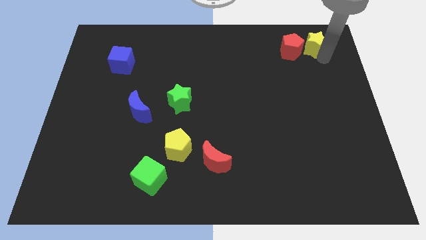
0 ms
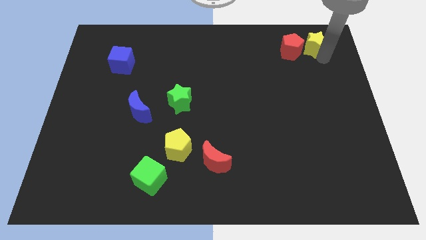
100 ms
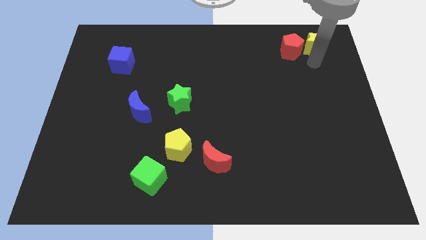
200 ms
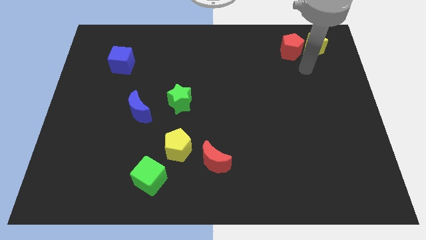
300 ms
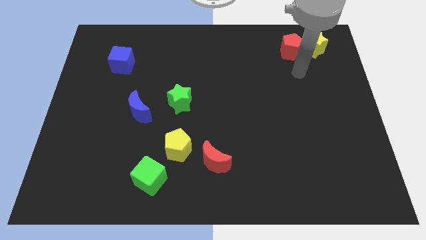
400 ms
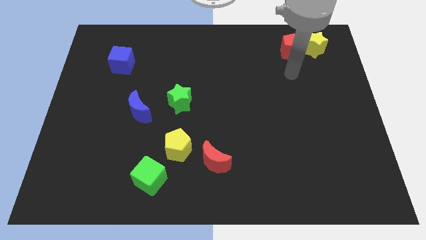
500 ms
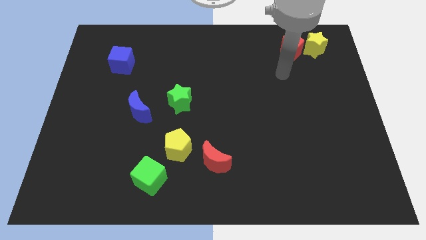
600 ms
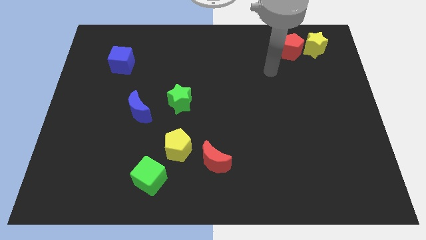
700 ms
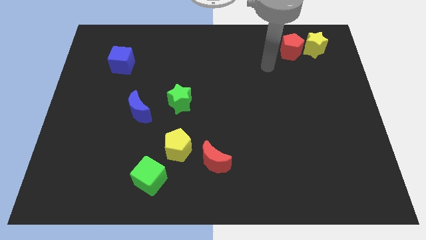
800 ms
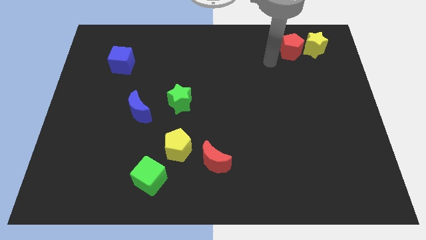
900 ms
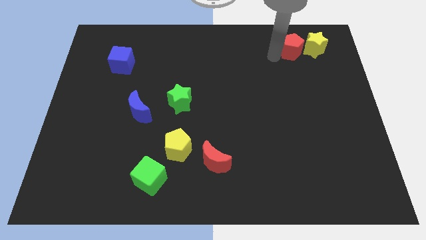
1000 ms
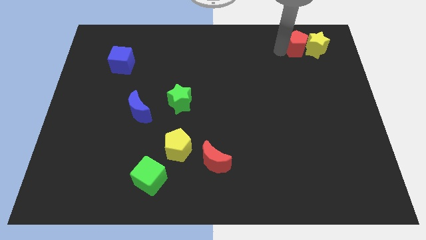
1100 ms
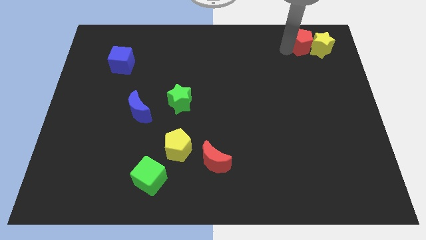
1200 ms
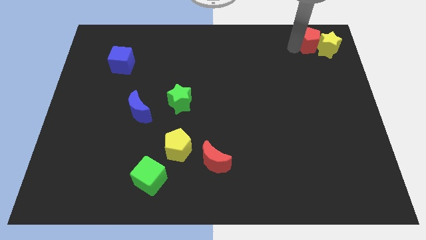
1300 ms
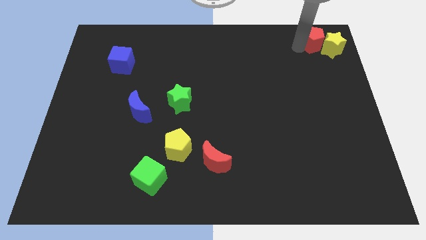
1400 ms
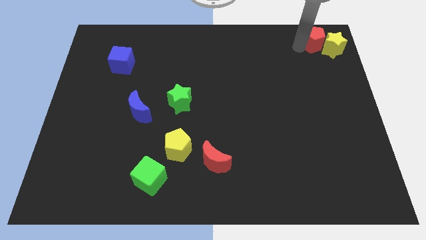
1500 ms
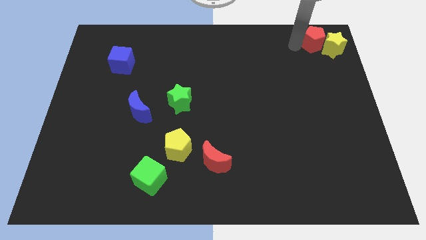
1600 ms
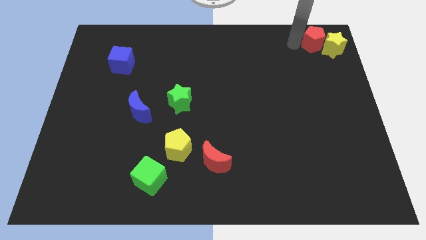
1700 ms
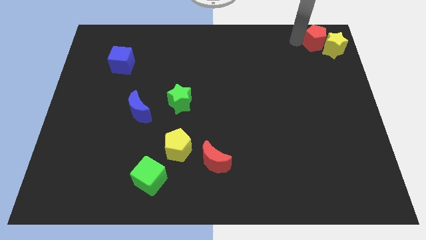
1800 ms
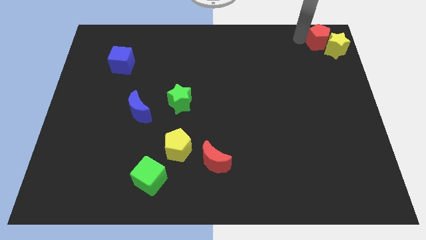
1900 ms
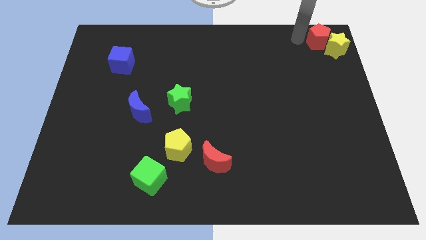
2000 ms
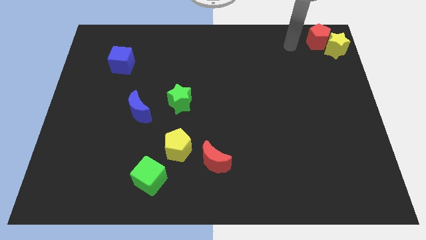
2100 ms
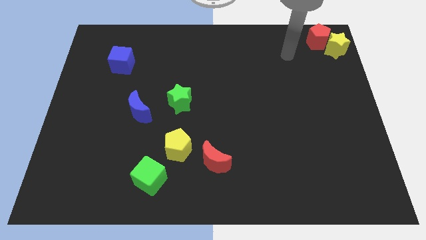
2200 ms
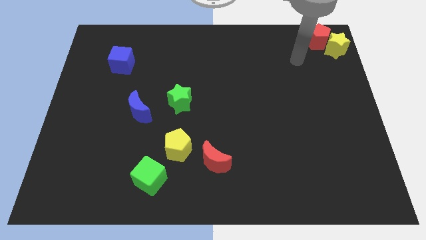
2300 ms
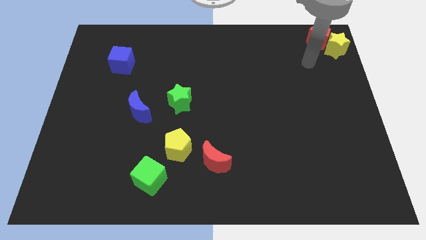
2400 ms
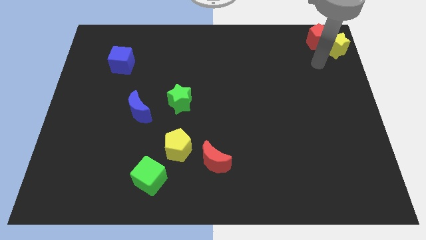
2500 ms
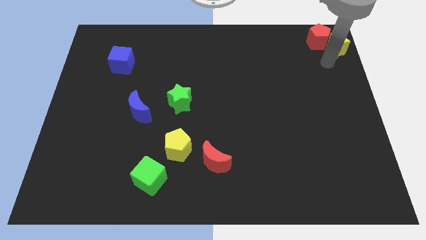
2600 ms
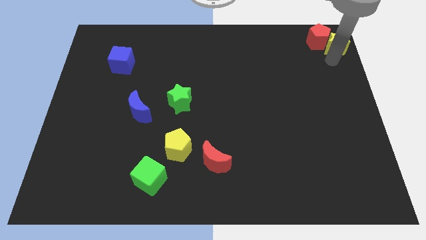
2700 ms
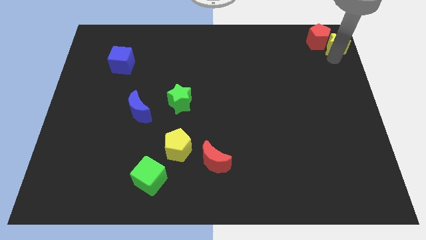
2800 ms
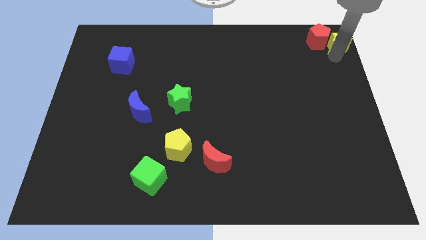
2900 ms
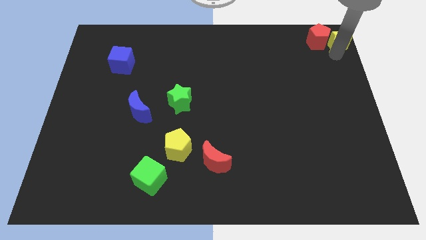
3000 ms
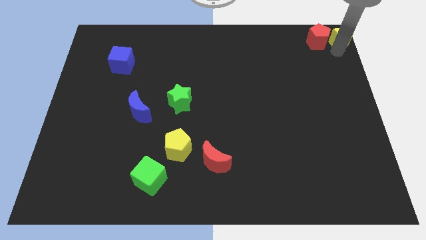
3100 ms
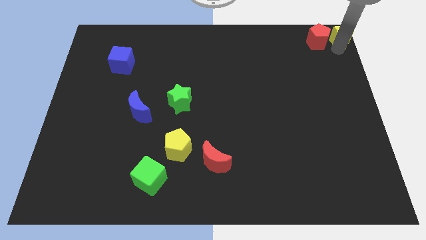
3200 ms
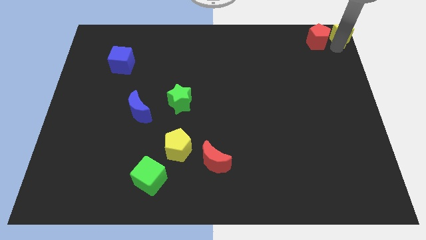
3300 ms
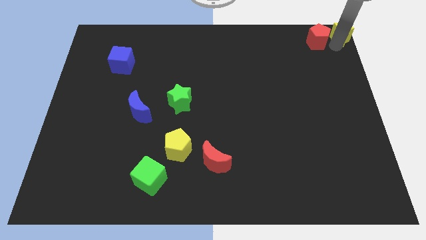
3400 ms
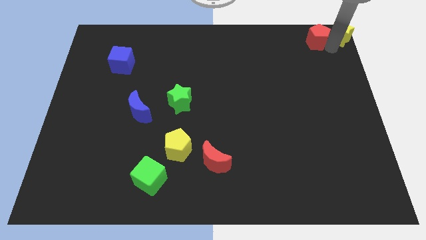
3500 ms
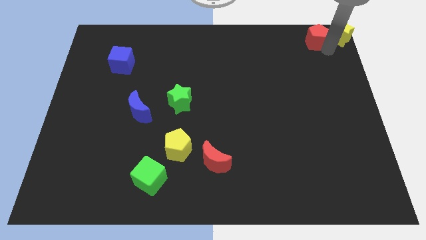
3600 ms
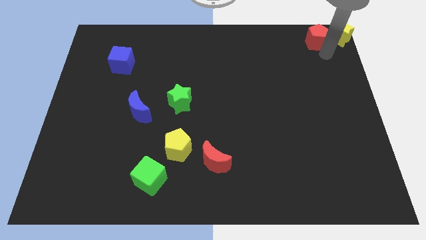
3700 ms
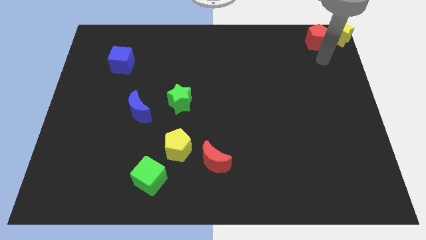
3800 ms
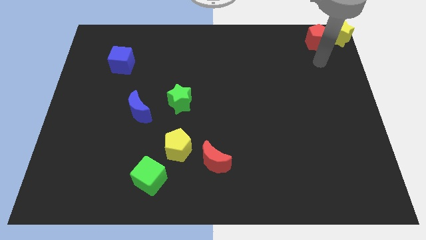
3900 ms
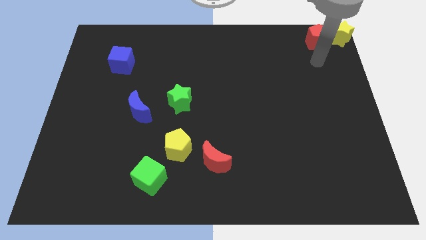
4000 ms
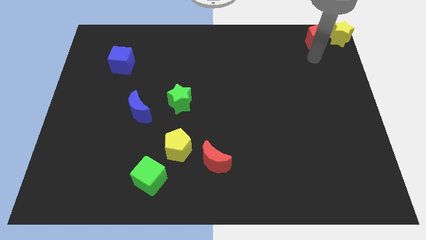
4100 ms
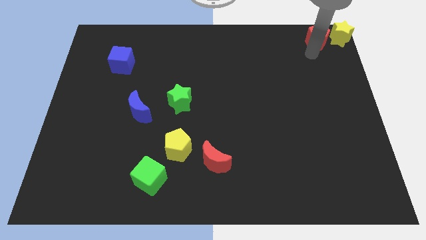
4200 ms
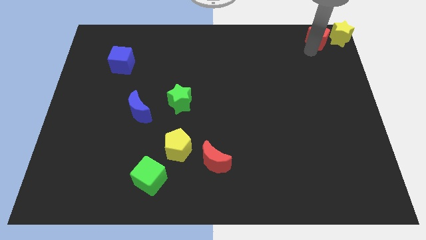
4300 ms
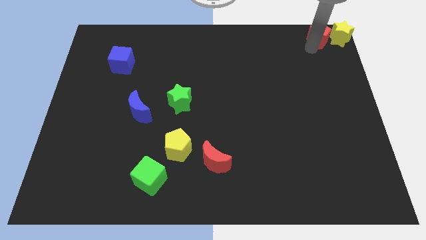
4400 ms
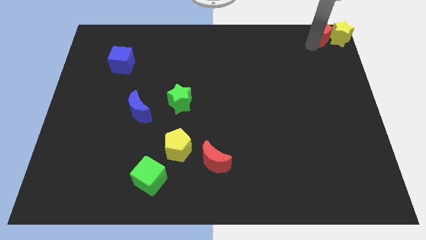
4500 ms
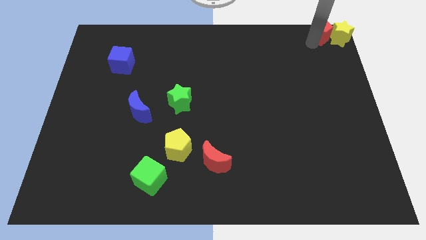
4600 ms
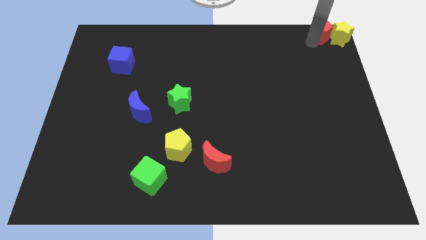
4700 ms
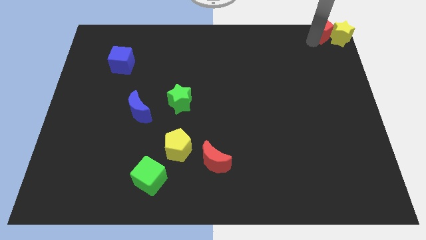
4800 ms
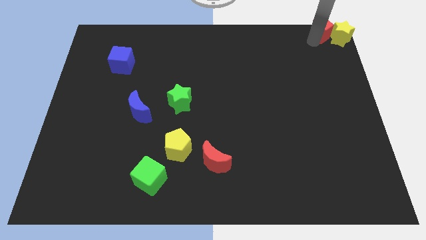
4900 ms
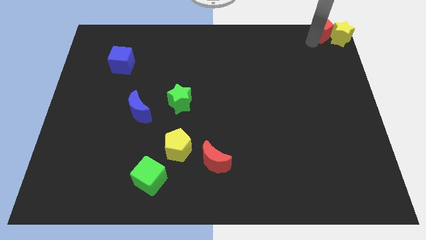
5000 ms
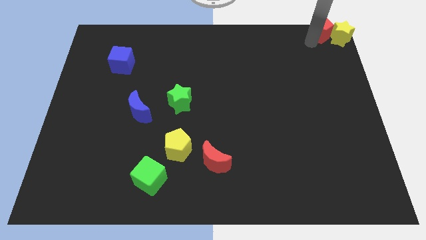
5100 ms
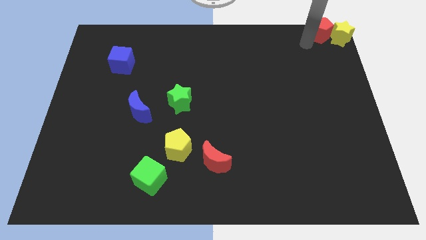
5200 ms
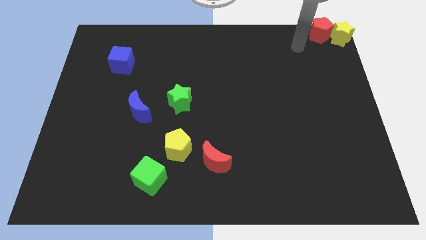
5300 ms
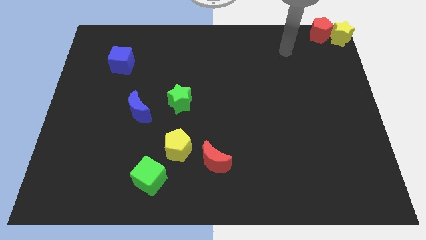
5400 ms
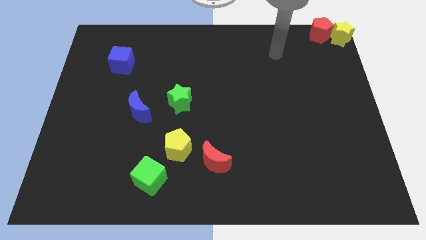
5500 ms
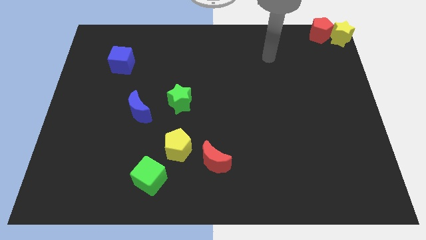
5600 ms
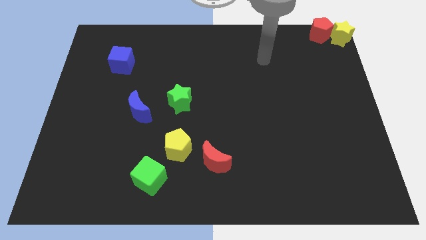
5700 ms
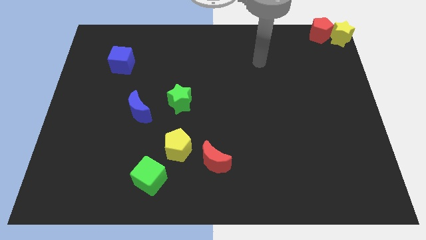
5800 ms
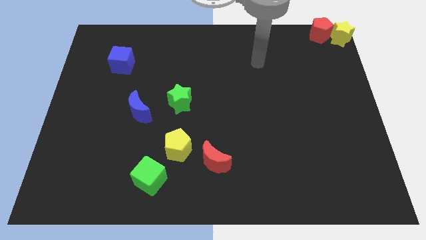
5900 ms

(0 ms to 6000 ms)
move the red pentagon and yellow star towards the top right corner of the board

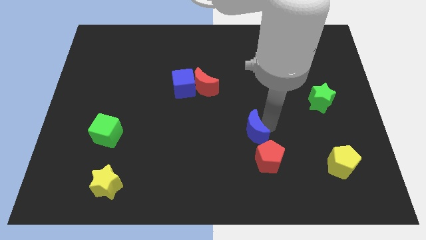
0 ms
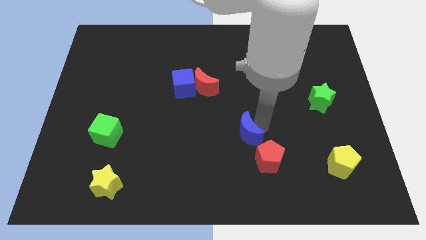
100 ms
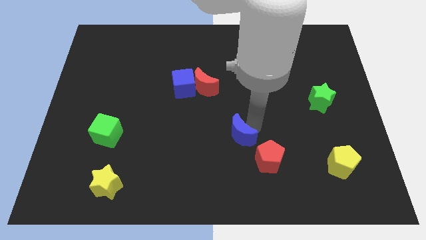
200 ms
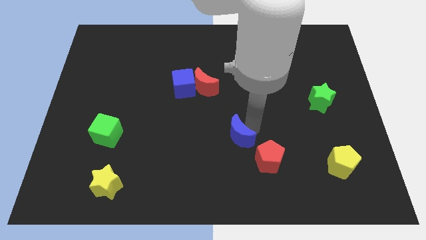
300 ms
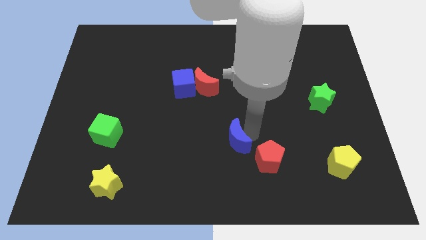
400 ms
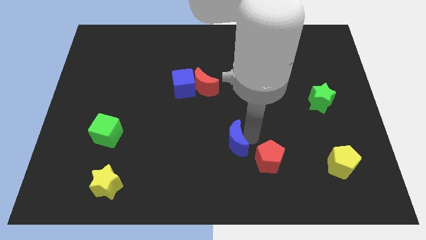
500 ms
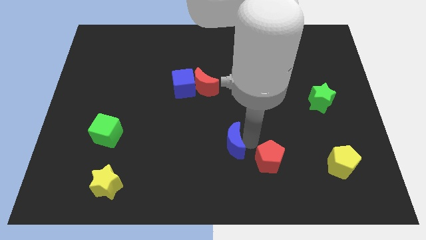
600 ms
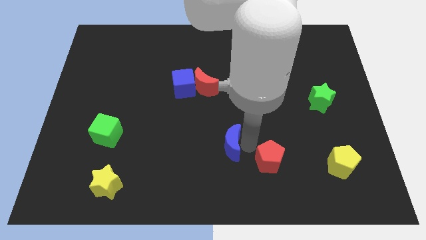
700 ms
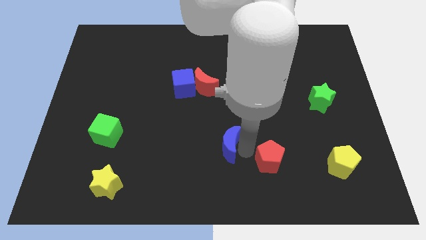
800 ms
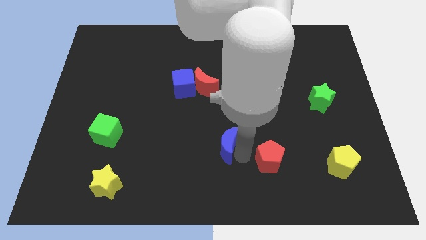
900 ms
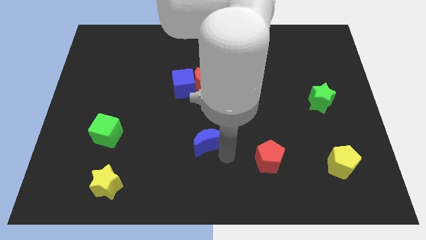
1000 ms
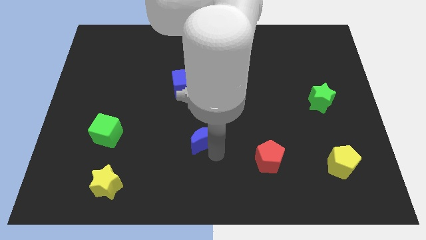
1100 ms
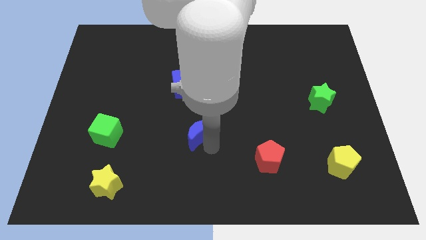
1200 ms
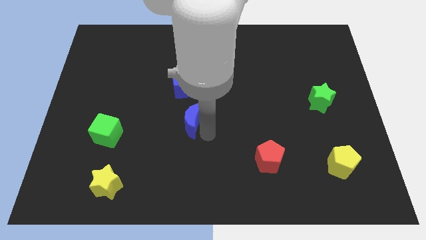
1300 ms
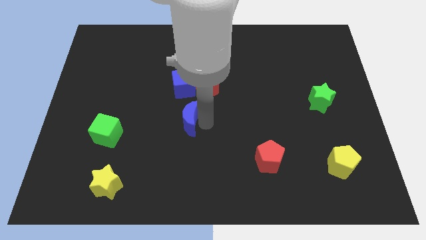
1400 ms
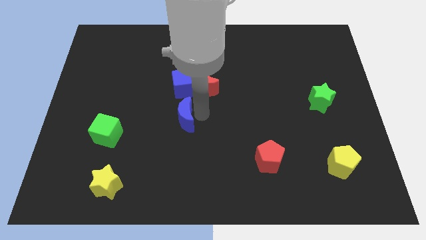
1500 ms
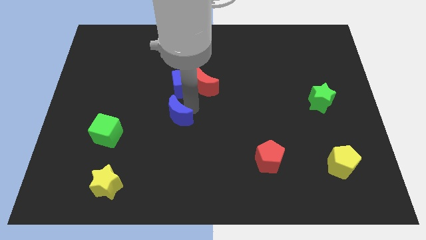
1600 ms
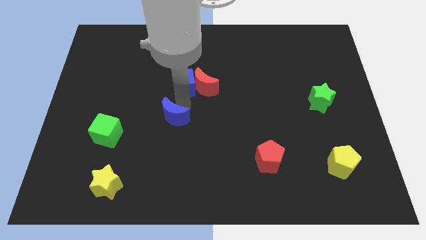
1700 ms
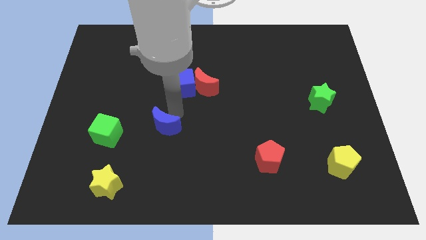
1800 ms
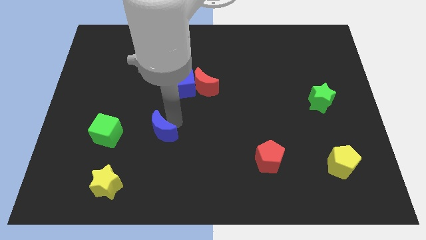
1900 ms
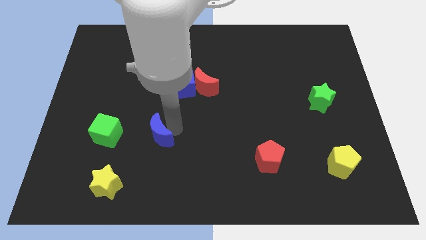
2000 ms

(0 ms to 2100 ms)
push the blue crescent towards the left center of the board

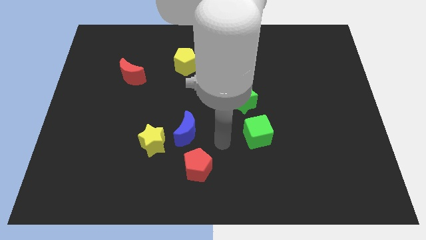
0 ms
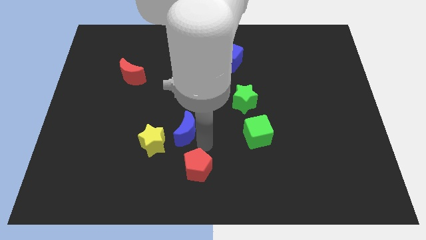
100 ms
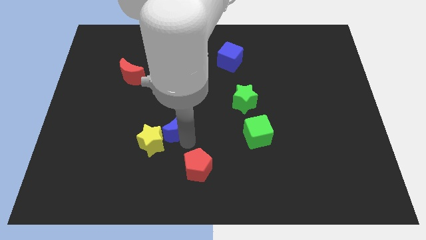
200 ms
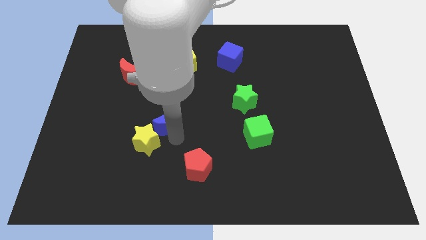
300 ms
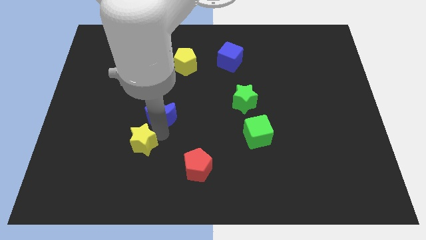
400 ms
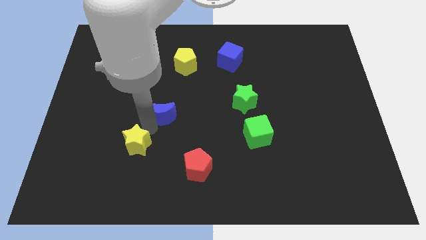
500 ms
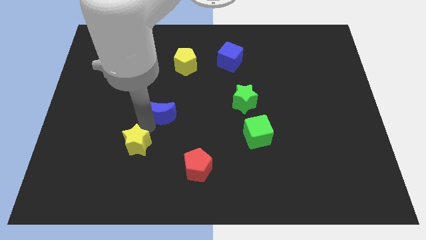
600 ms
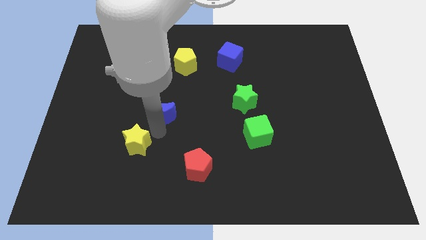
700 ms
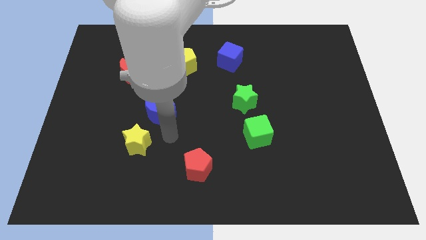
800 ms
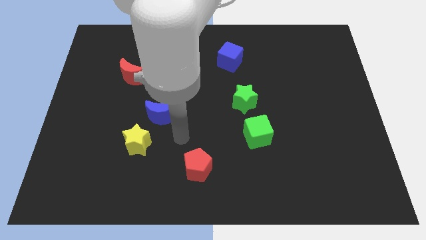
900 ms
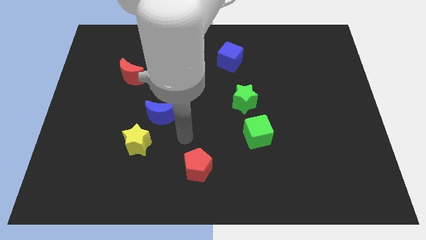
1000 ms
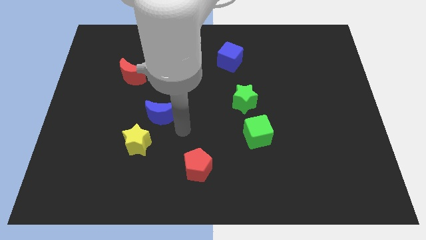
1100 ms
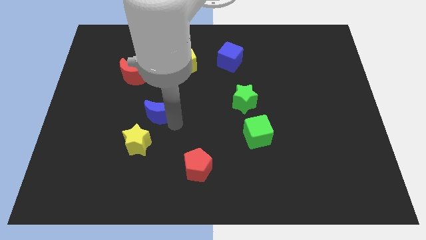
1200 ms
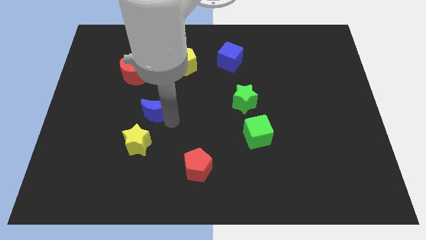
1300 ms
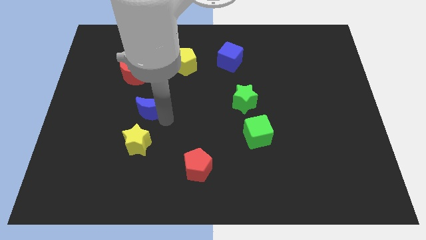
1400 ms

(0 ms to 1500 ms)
move the blue moon diagonally on the bottom right side of the red crescent
